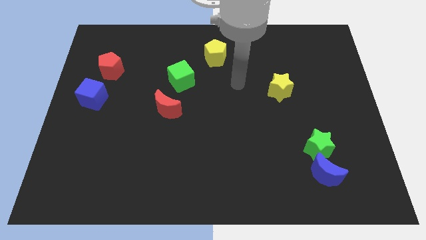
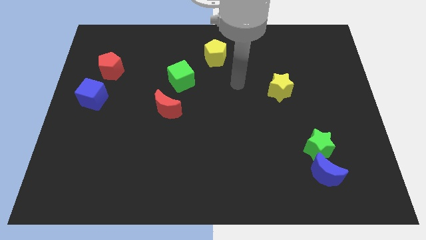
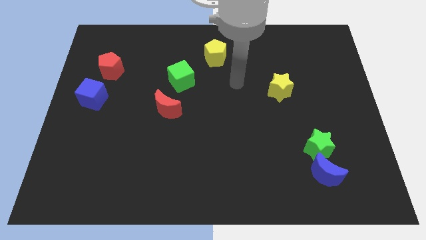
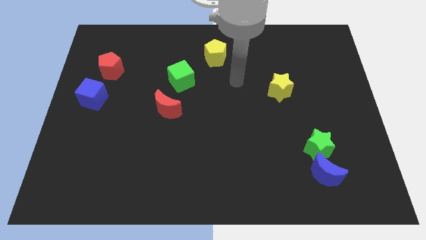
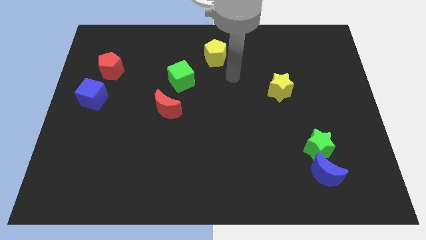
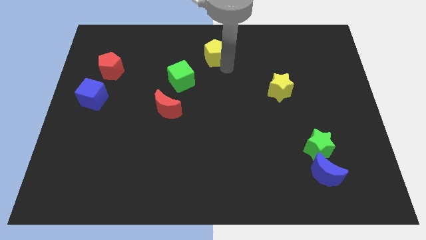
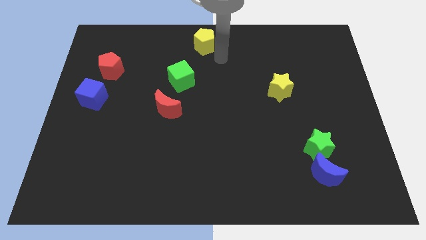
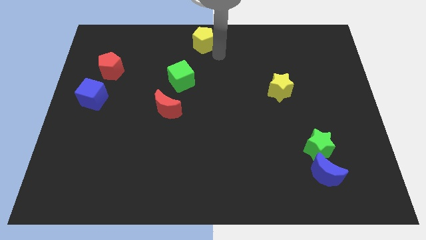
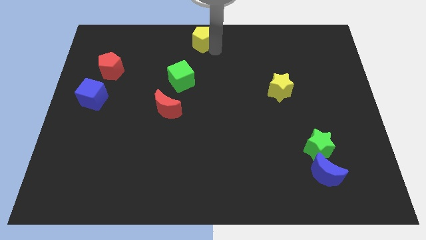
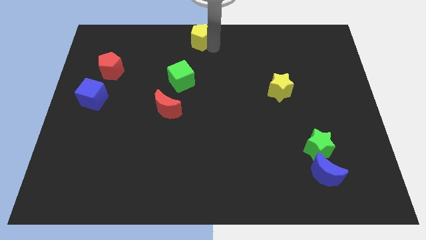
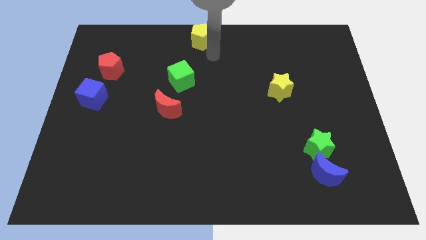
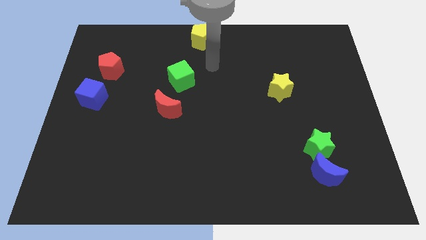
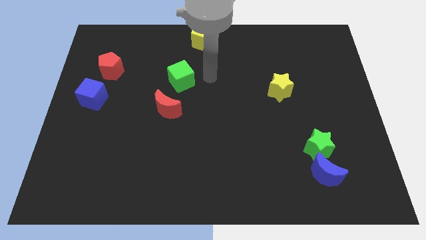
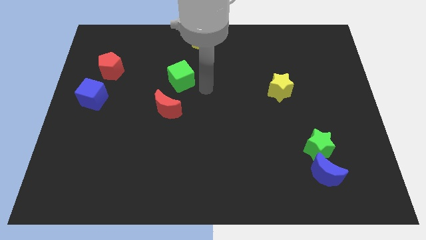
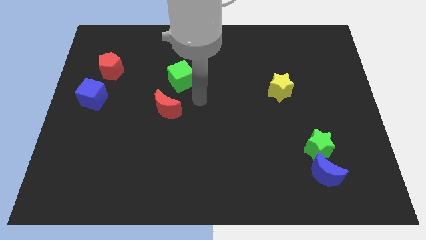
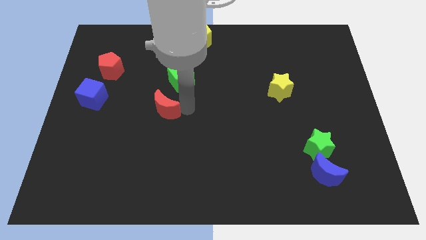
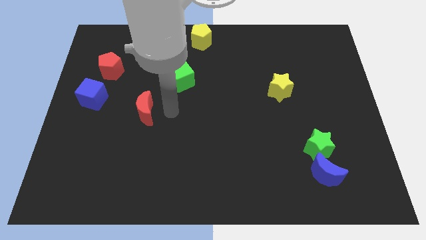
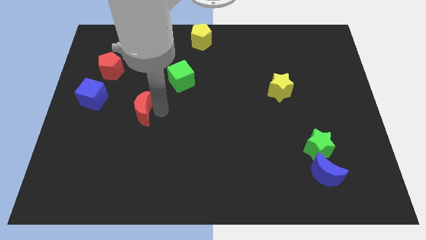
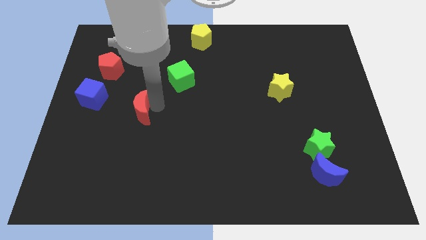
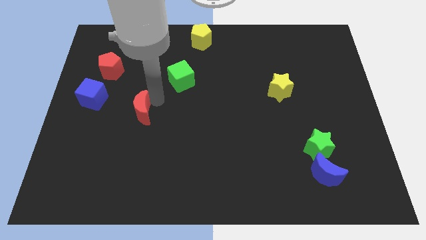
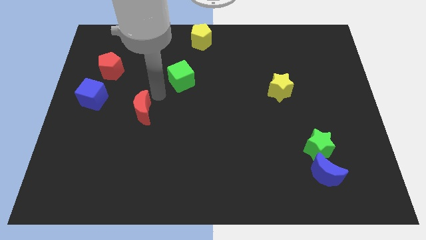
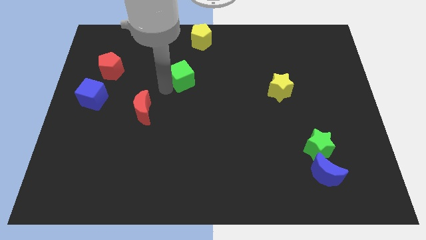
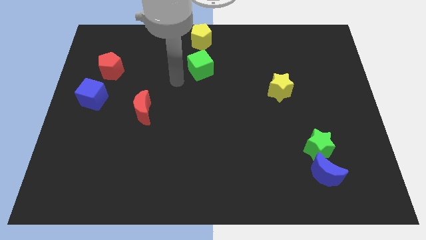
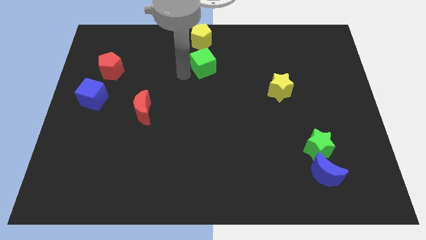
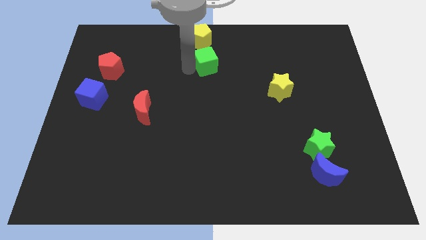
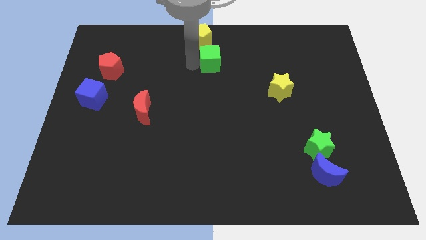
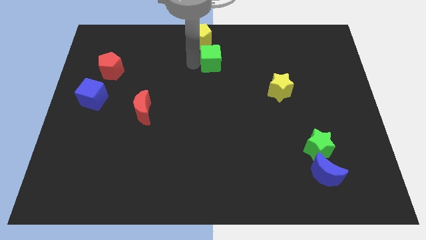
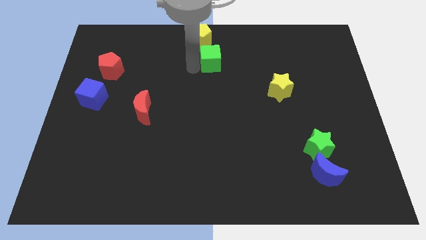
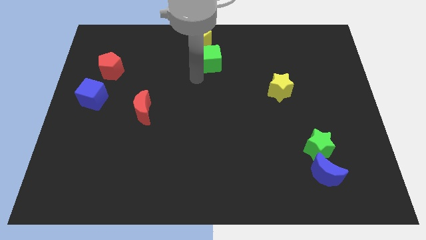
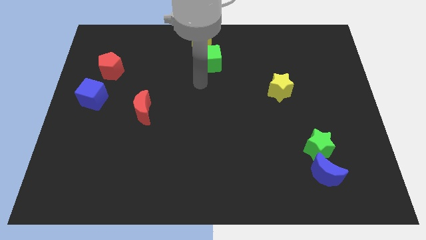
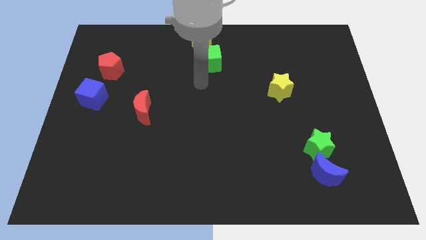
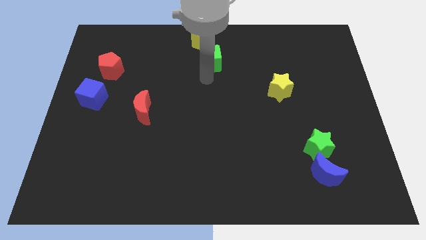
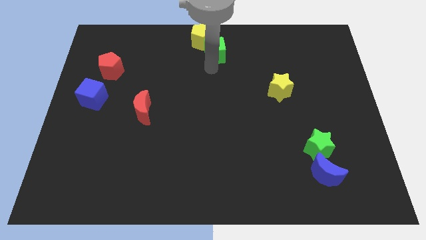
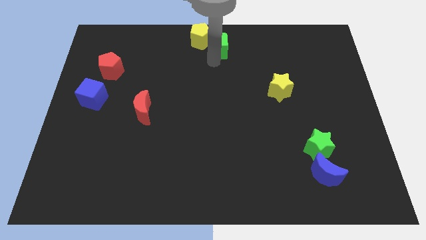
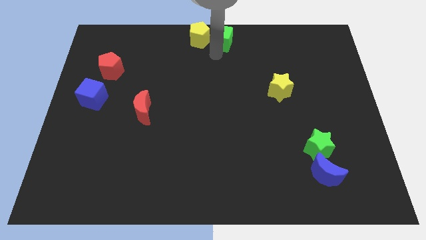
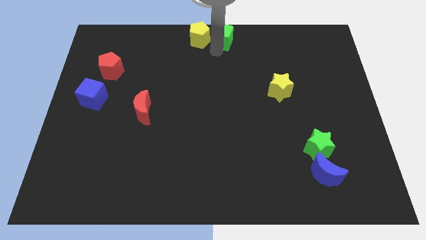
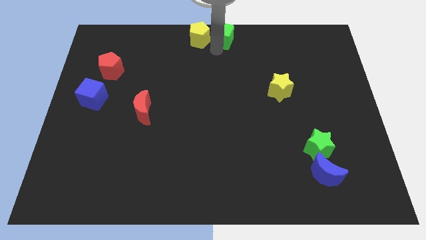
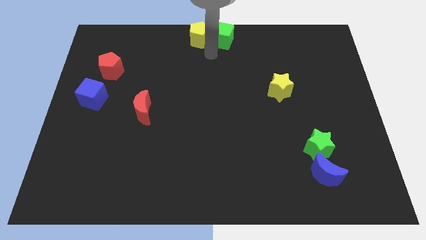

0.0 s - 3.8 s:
push the green cube towards the top center

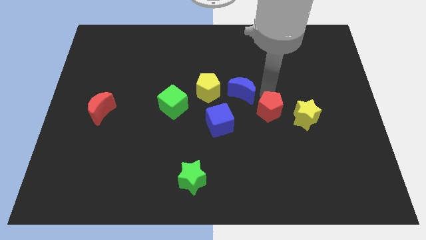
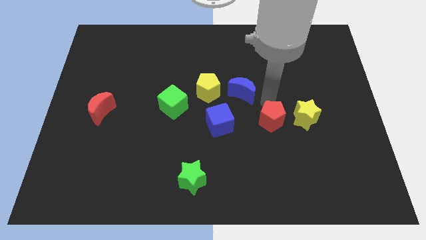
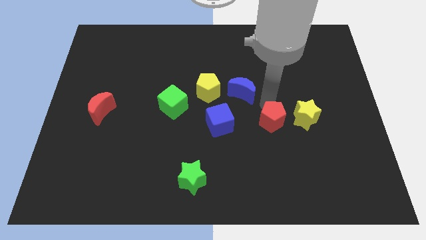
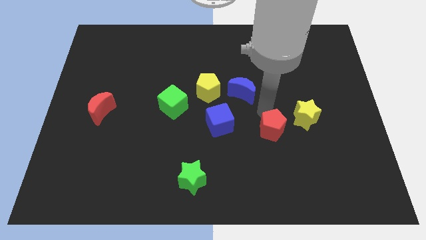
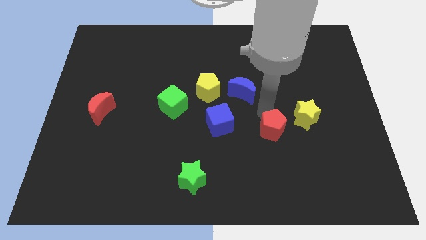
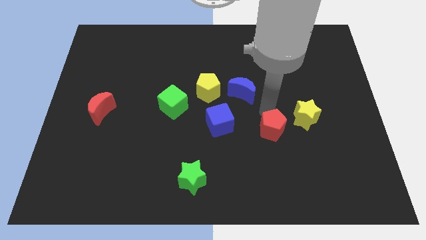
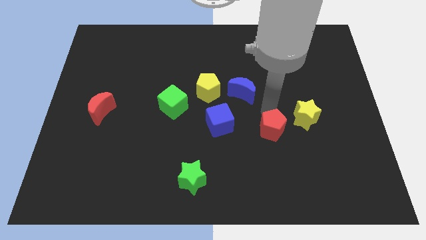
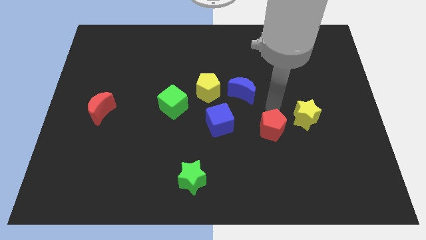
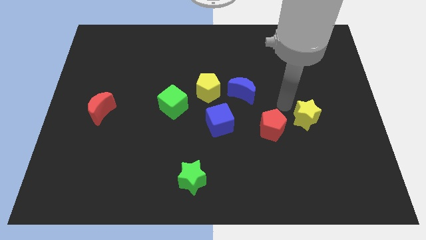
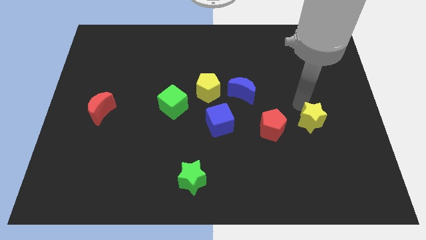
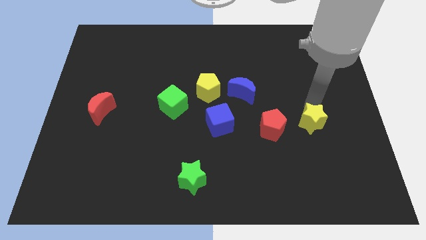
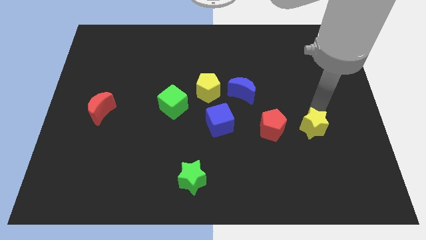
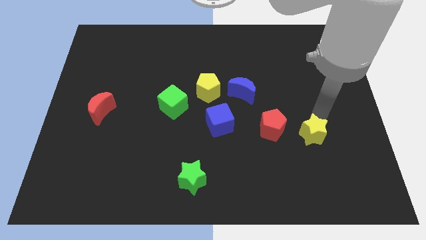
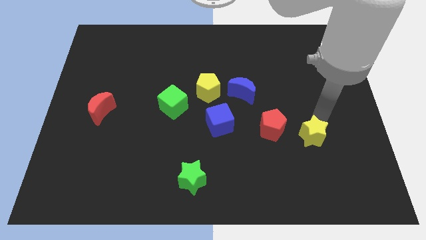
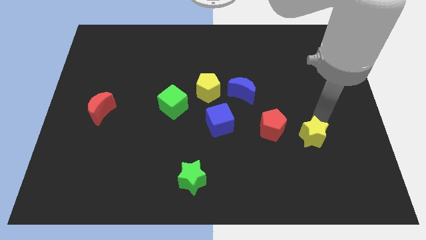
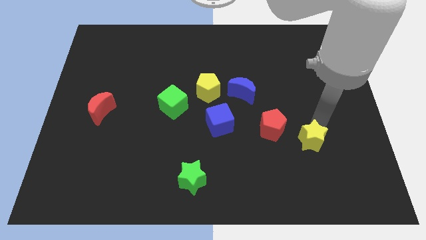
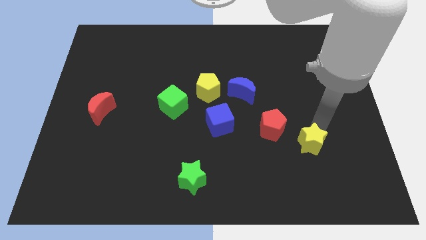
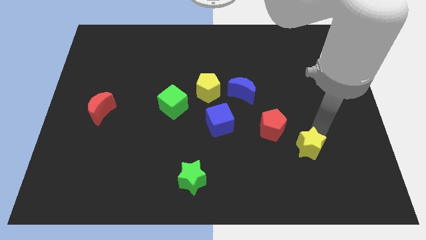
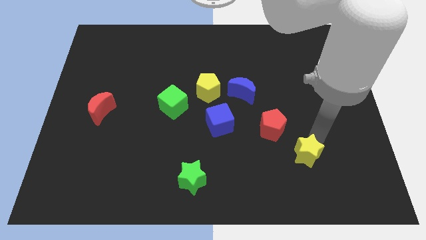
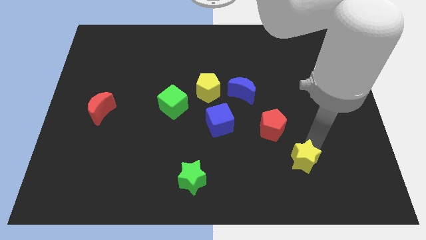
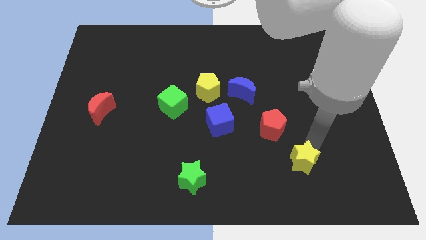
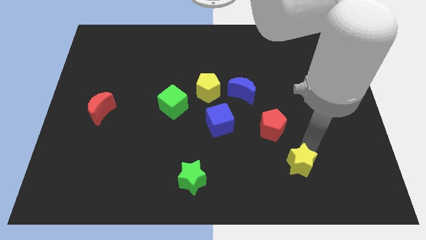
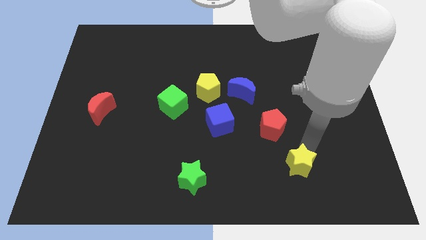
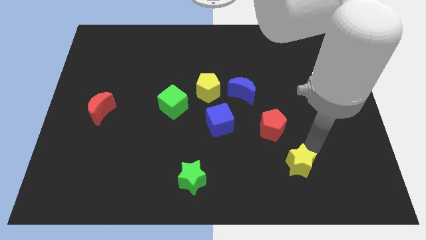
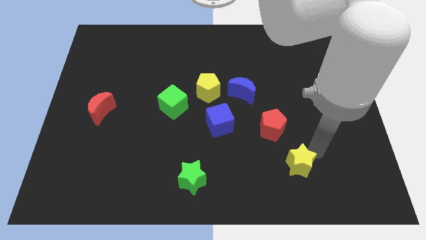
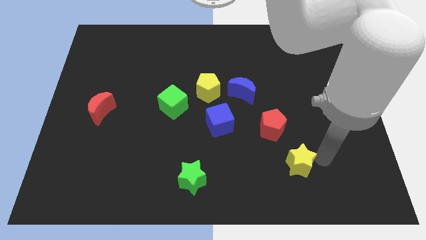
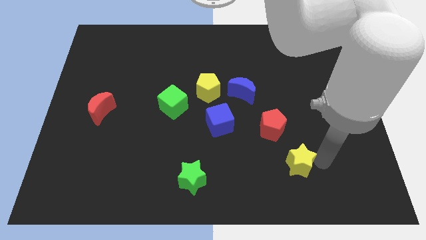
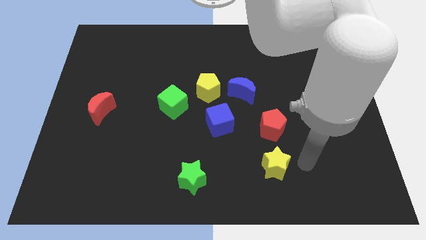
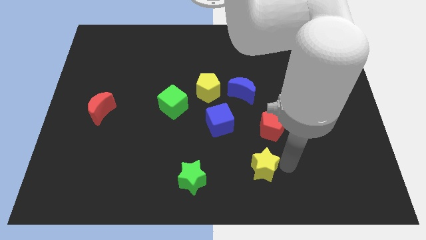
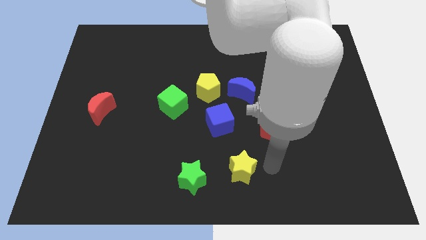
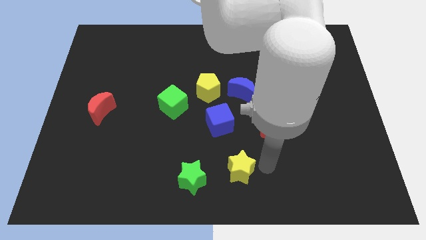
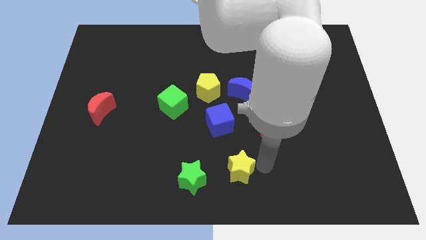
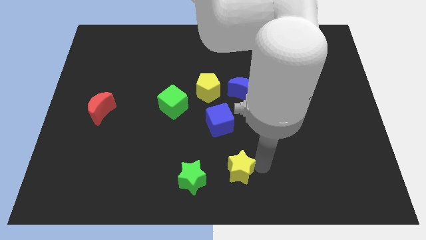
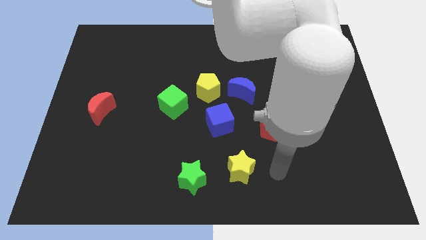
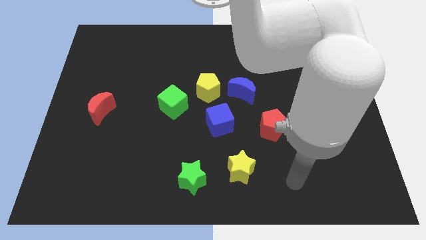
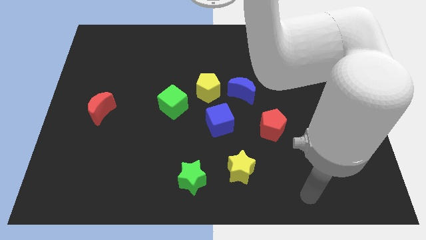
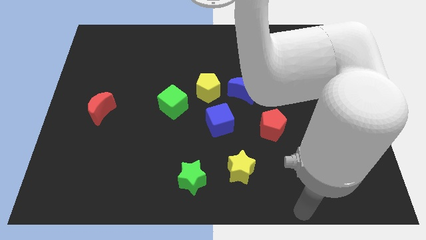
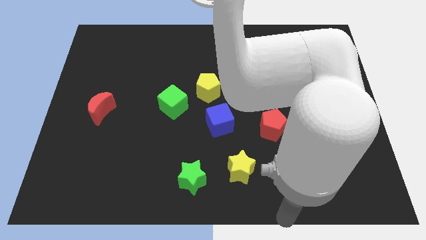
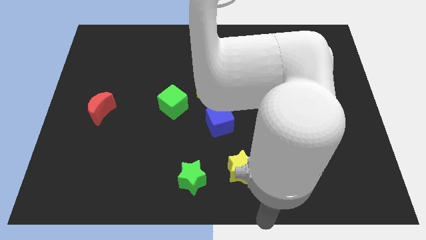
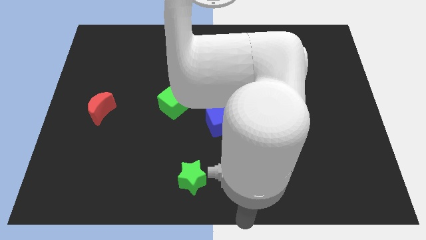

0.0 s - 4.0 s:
point your arm below the yellow star

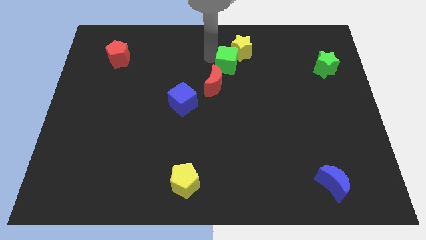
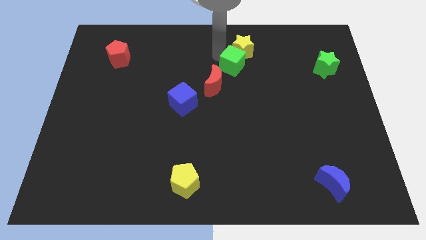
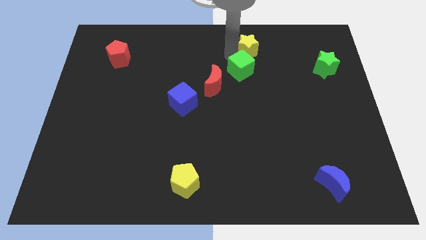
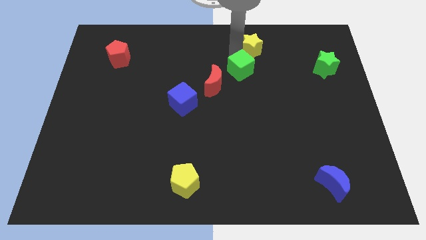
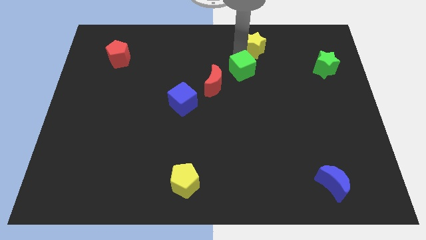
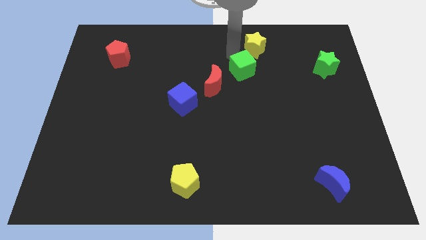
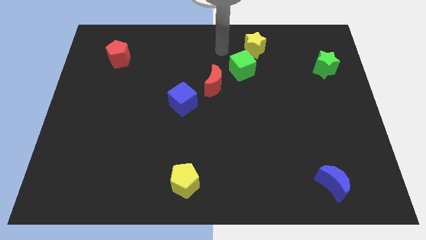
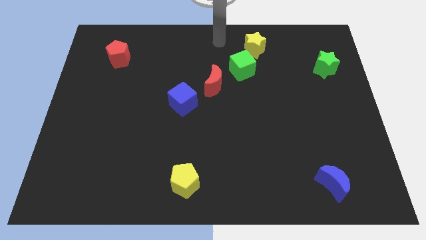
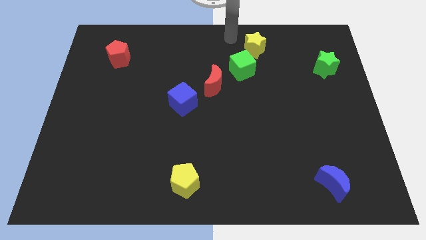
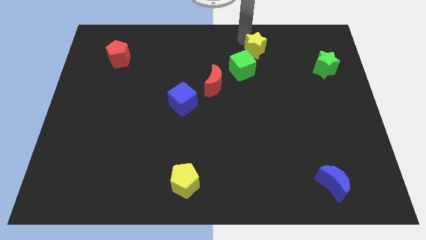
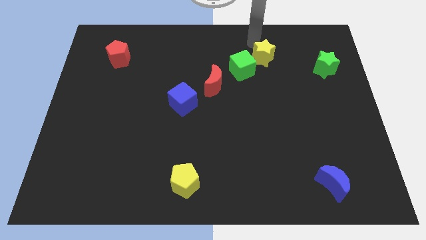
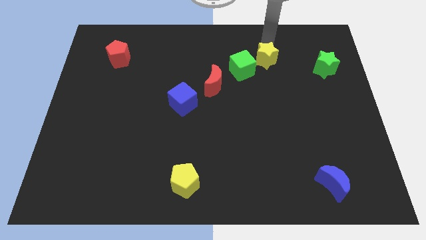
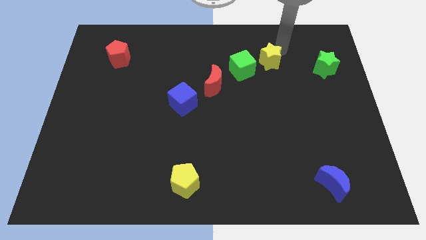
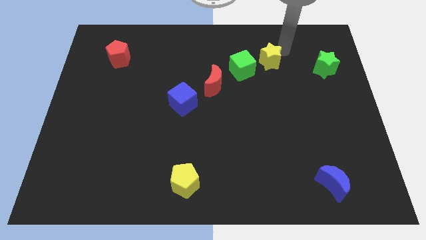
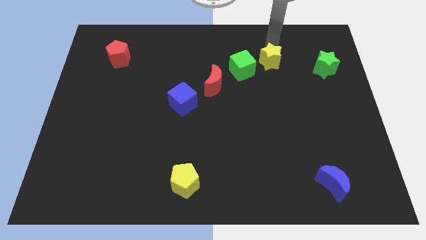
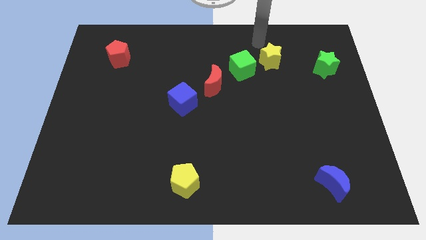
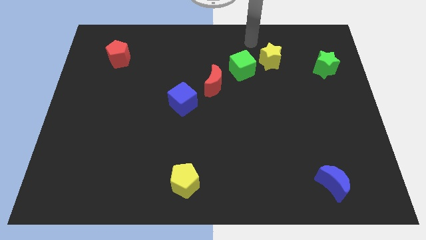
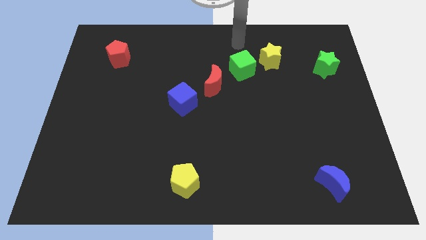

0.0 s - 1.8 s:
separate the green cube and the yellow star
